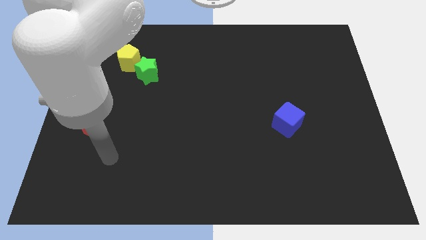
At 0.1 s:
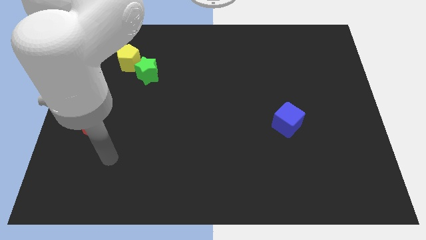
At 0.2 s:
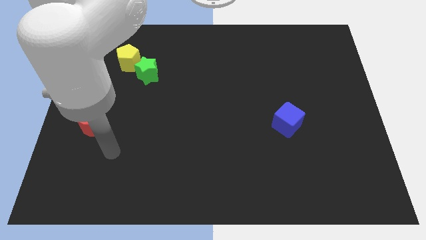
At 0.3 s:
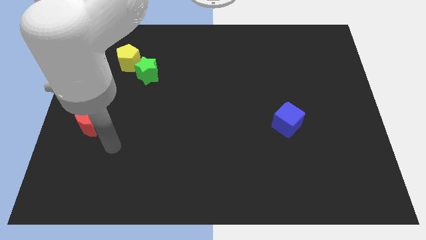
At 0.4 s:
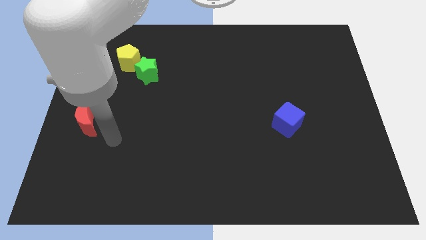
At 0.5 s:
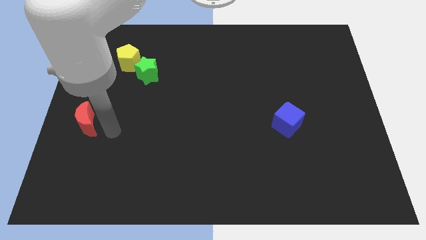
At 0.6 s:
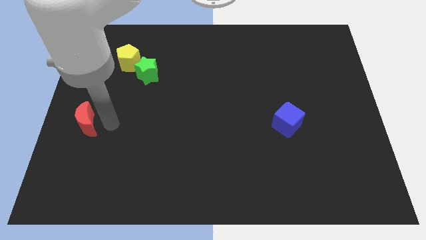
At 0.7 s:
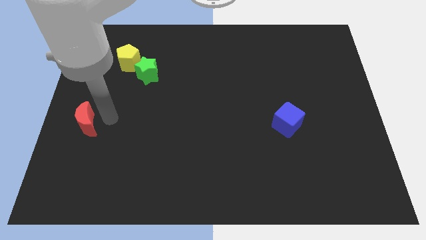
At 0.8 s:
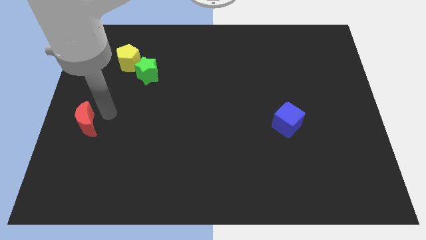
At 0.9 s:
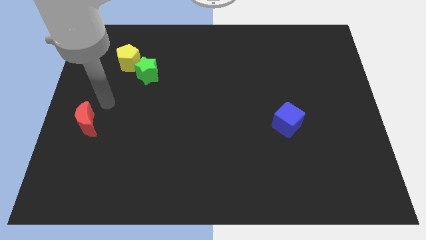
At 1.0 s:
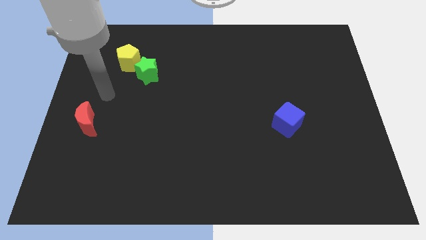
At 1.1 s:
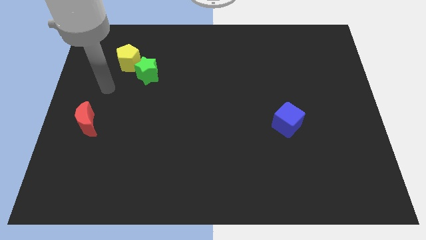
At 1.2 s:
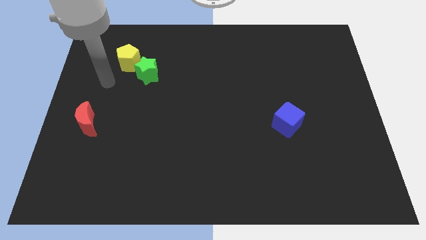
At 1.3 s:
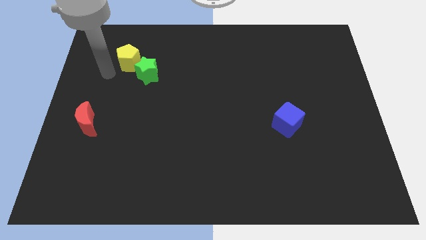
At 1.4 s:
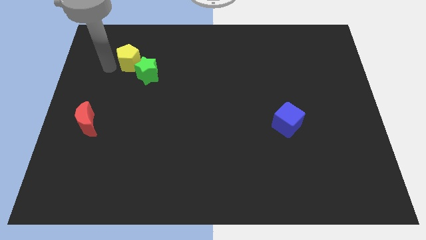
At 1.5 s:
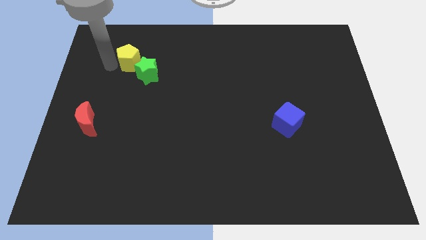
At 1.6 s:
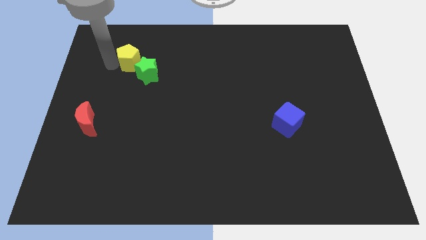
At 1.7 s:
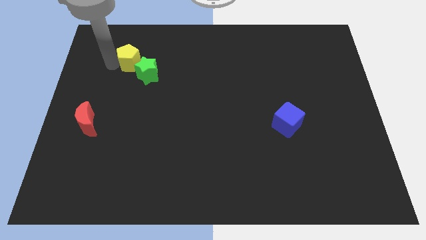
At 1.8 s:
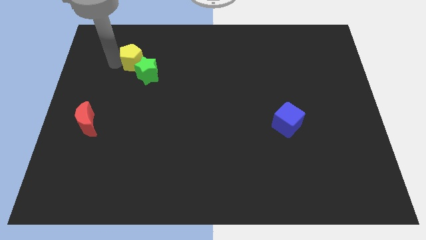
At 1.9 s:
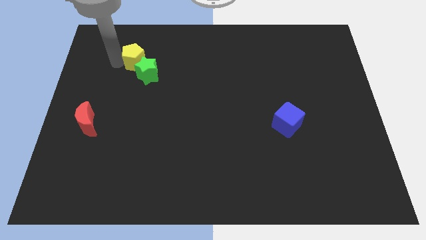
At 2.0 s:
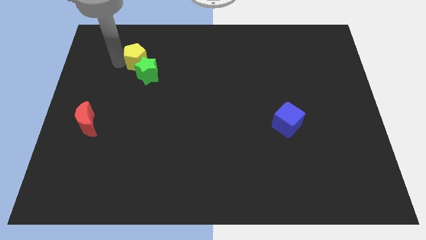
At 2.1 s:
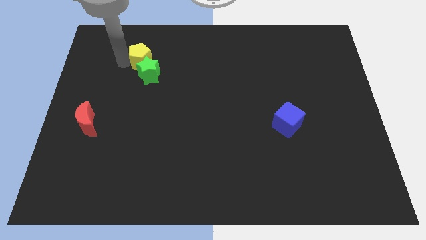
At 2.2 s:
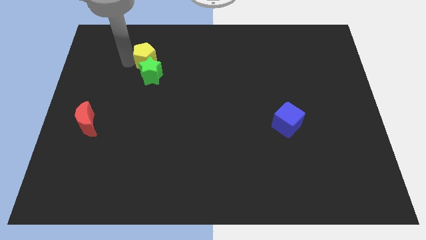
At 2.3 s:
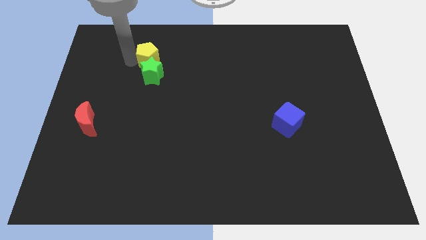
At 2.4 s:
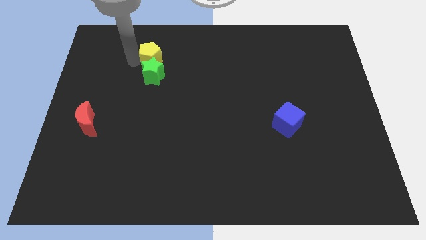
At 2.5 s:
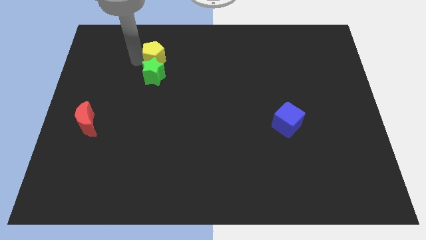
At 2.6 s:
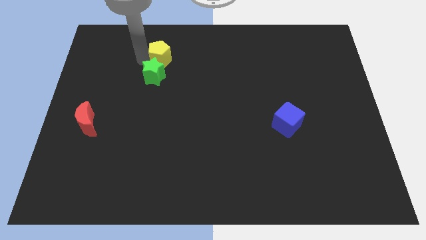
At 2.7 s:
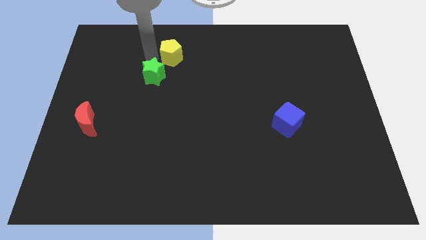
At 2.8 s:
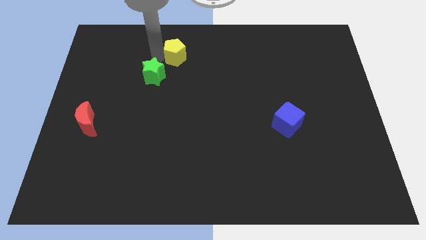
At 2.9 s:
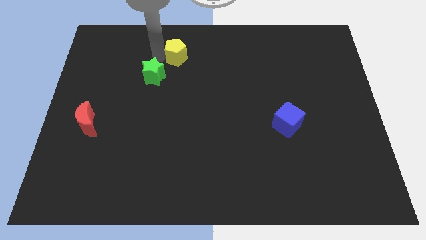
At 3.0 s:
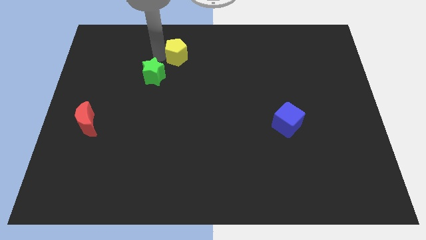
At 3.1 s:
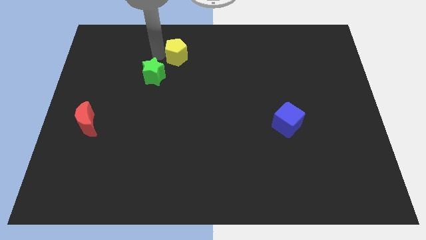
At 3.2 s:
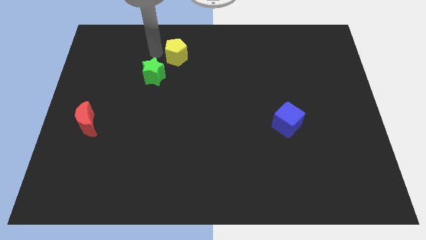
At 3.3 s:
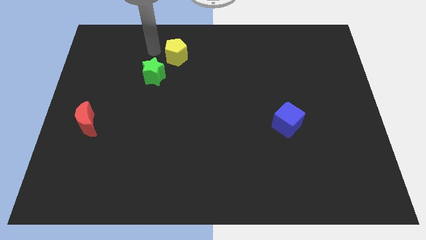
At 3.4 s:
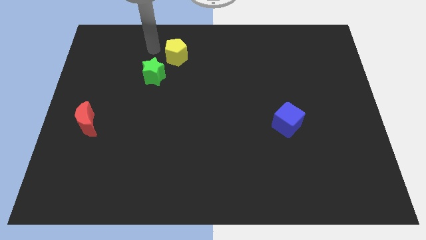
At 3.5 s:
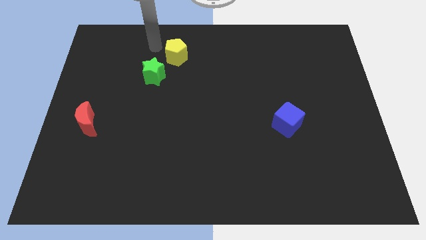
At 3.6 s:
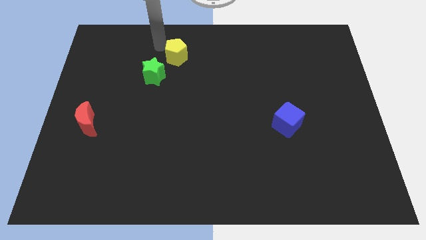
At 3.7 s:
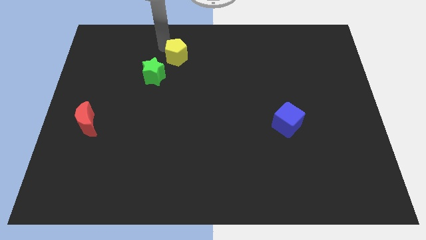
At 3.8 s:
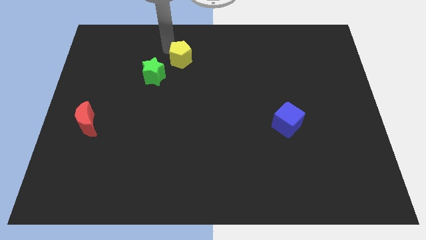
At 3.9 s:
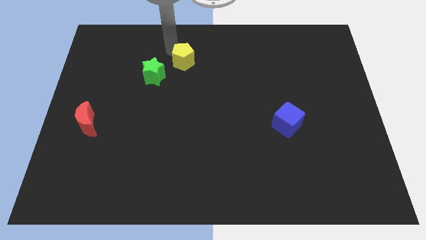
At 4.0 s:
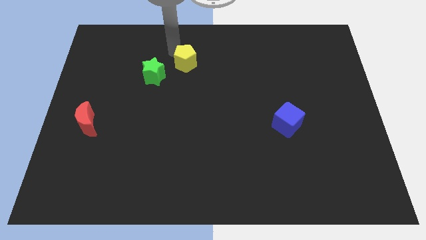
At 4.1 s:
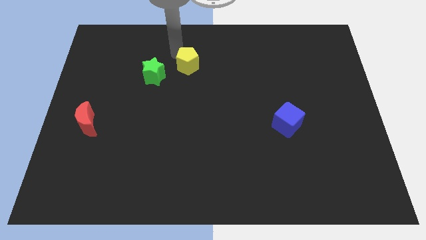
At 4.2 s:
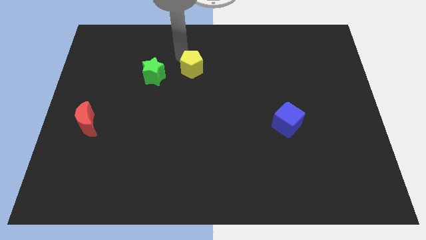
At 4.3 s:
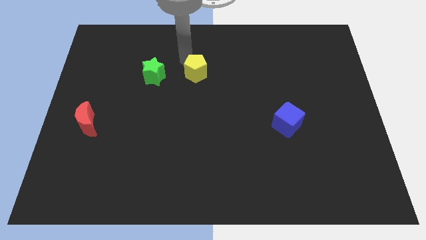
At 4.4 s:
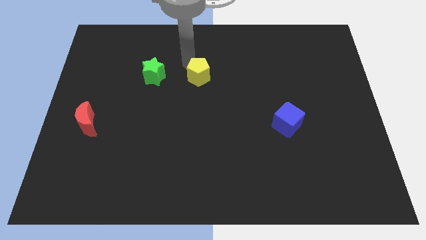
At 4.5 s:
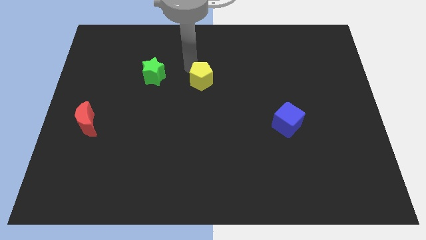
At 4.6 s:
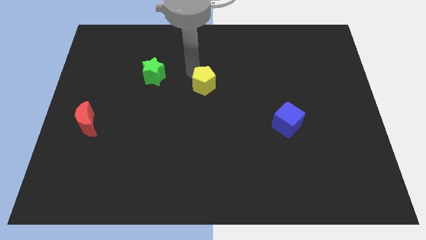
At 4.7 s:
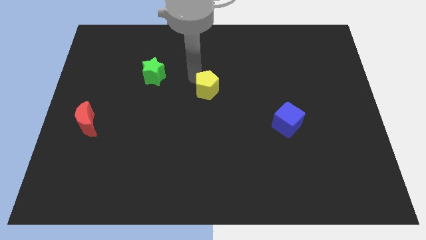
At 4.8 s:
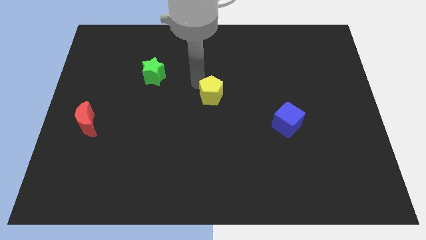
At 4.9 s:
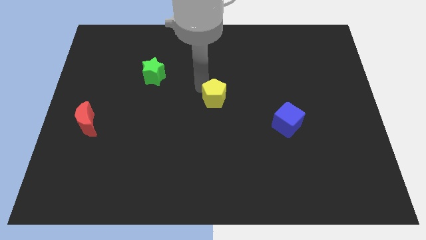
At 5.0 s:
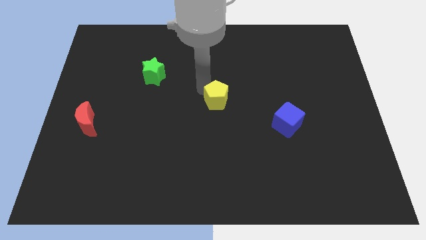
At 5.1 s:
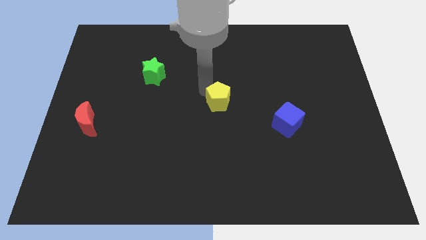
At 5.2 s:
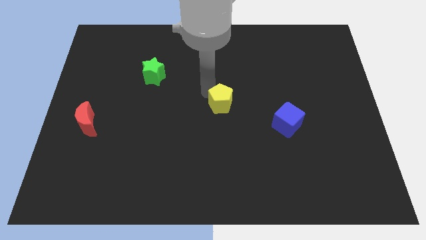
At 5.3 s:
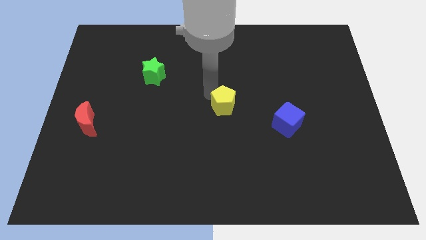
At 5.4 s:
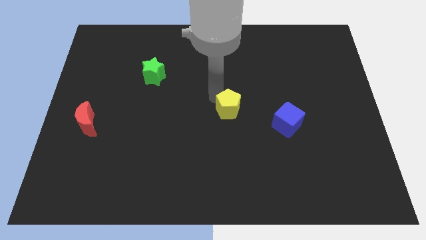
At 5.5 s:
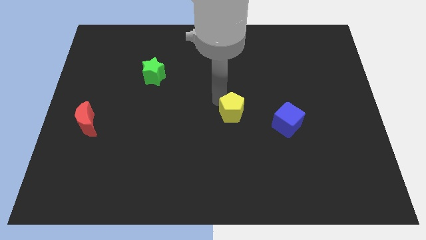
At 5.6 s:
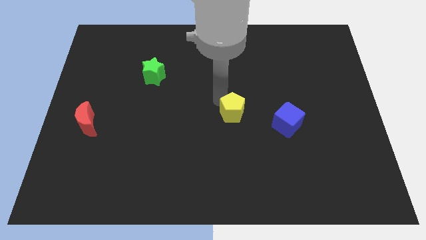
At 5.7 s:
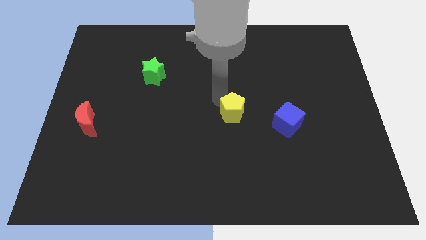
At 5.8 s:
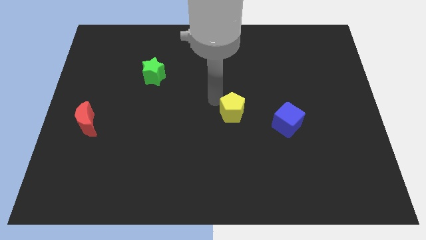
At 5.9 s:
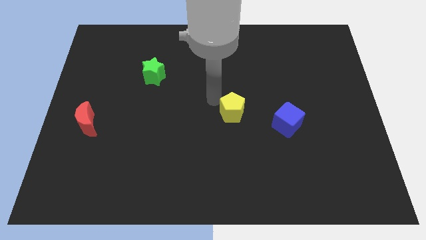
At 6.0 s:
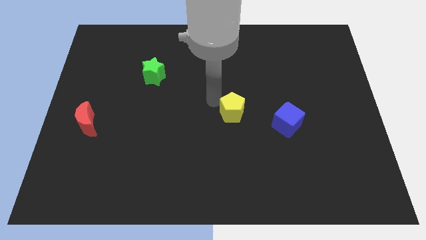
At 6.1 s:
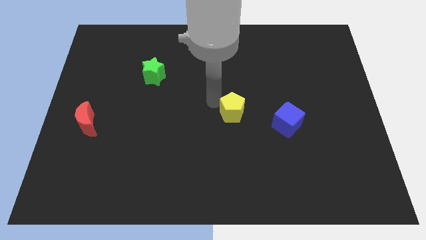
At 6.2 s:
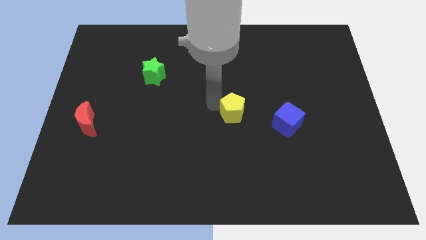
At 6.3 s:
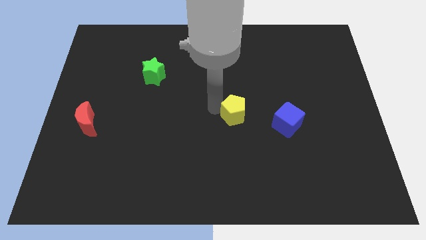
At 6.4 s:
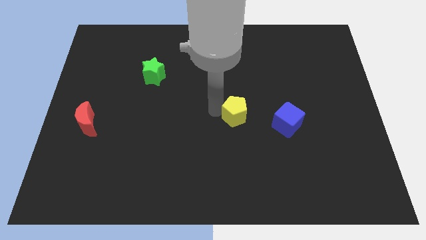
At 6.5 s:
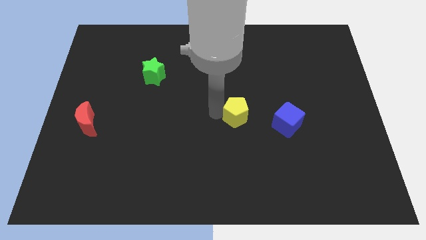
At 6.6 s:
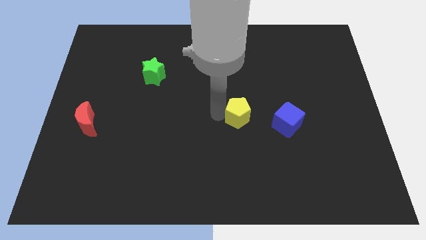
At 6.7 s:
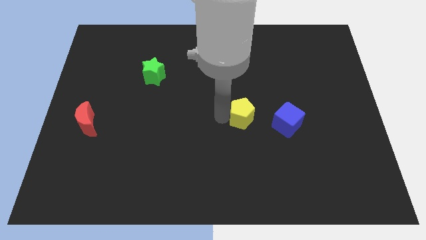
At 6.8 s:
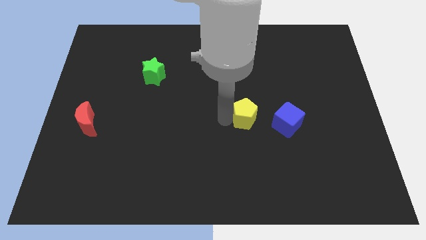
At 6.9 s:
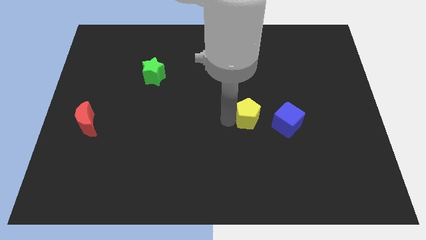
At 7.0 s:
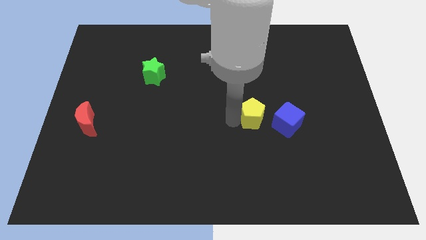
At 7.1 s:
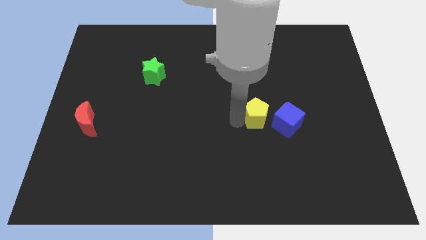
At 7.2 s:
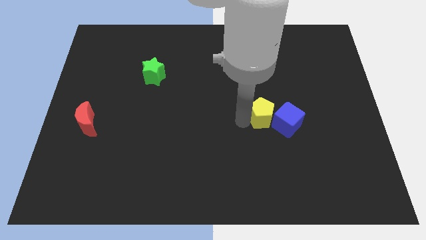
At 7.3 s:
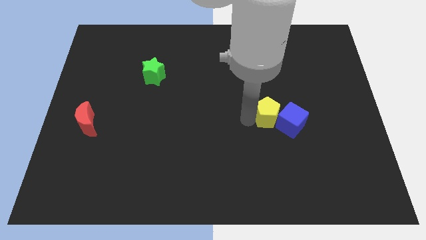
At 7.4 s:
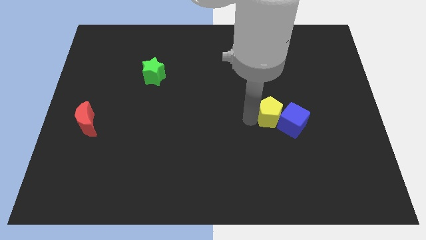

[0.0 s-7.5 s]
put the pentagon towards the blue block

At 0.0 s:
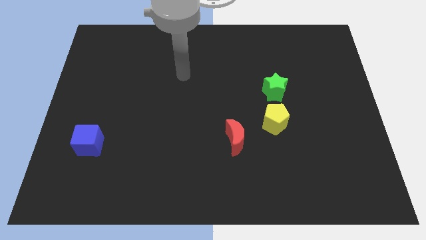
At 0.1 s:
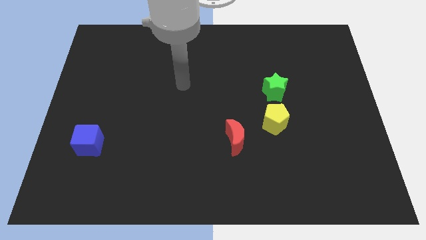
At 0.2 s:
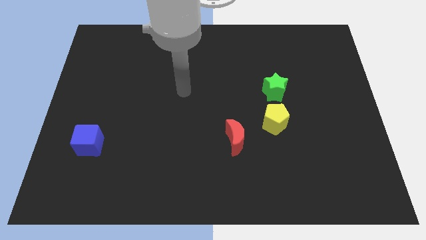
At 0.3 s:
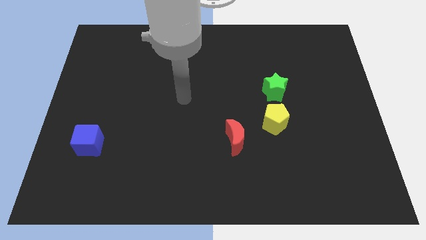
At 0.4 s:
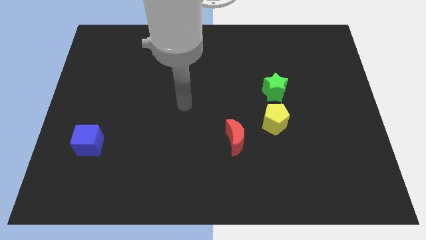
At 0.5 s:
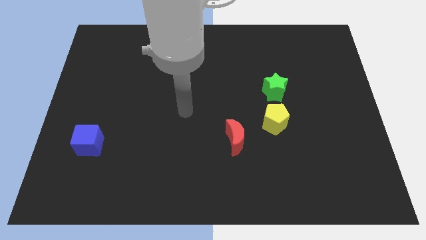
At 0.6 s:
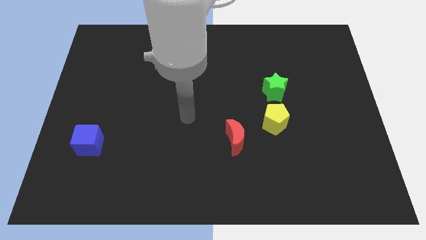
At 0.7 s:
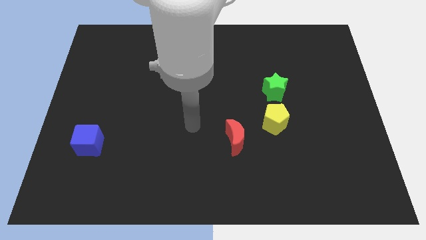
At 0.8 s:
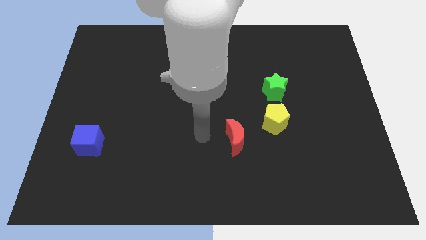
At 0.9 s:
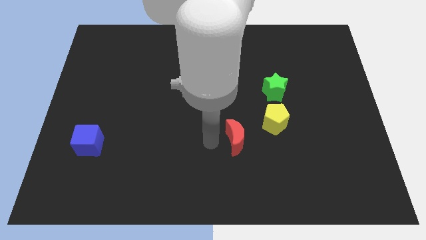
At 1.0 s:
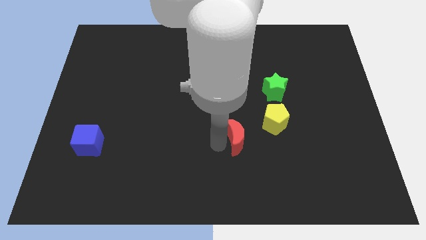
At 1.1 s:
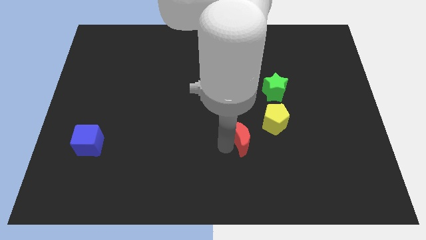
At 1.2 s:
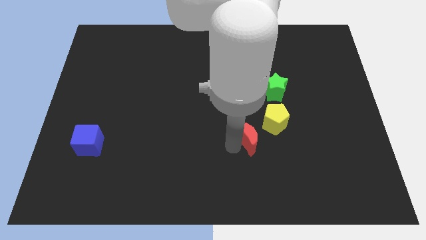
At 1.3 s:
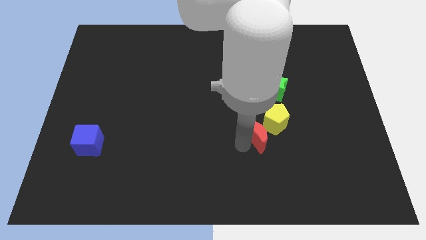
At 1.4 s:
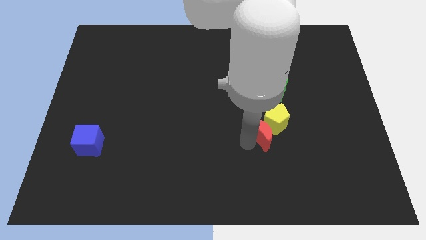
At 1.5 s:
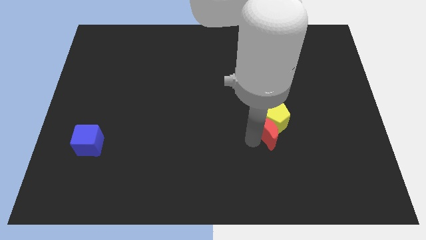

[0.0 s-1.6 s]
slide the red block next to the yellow block
